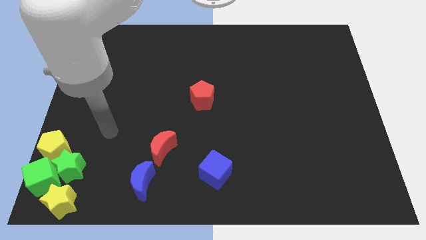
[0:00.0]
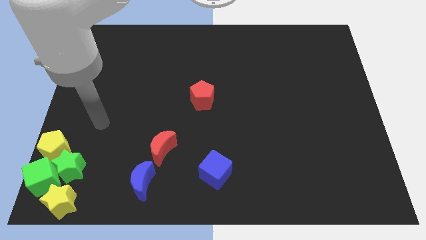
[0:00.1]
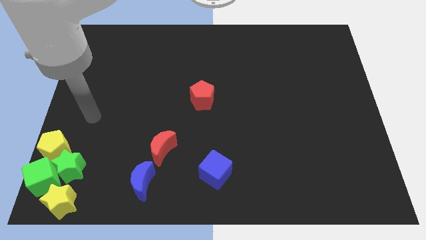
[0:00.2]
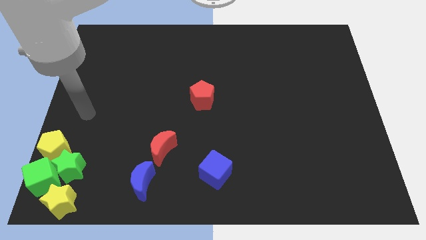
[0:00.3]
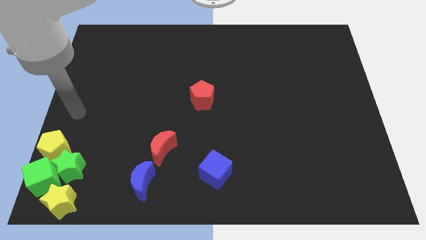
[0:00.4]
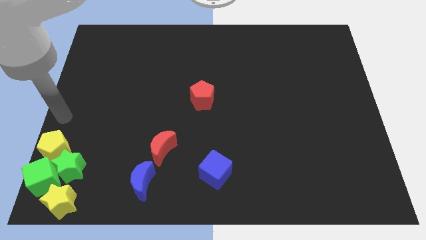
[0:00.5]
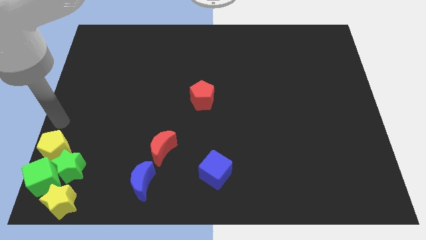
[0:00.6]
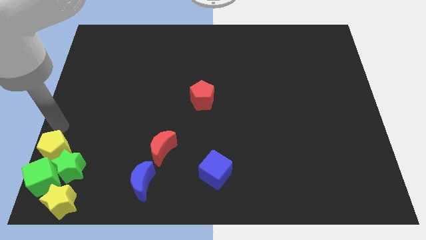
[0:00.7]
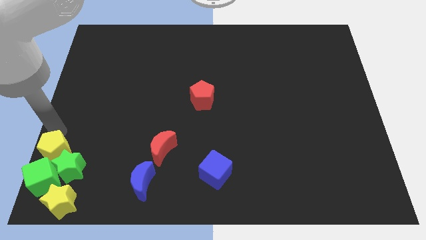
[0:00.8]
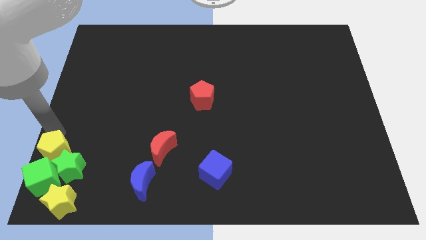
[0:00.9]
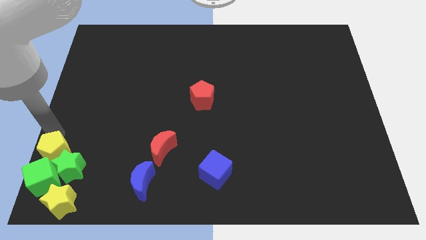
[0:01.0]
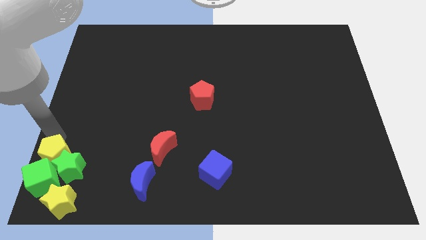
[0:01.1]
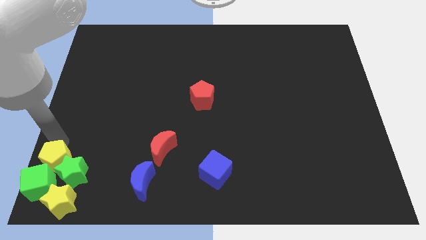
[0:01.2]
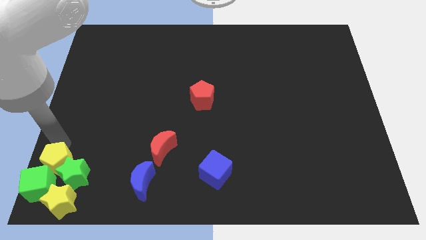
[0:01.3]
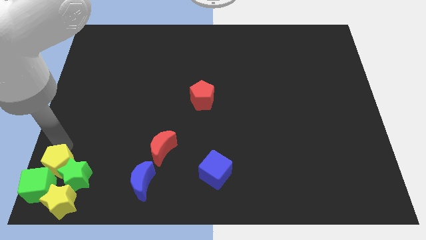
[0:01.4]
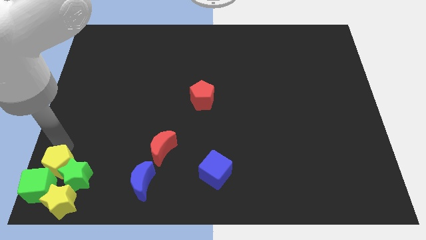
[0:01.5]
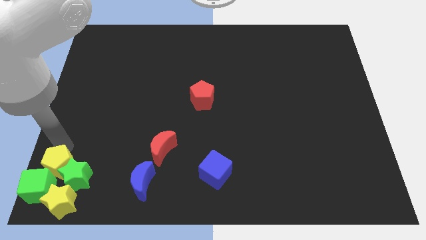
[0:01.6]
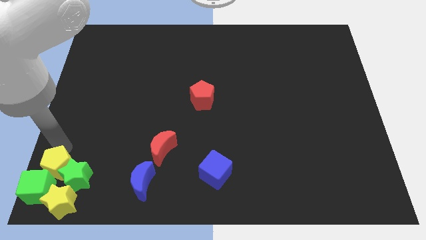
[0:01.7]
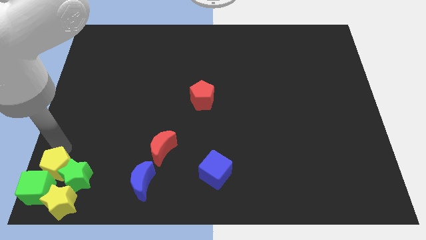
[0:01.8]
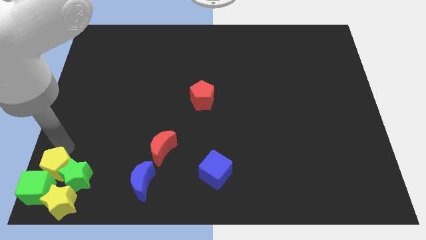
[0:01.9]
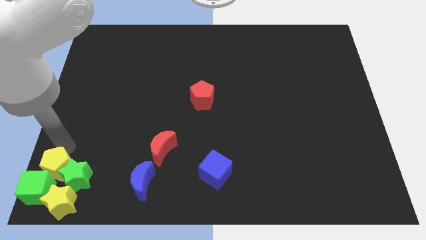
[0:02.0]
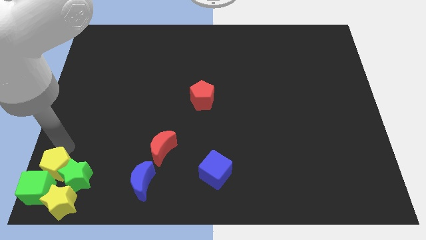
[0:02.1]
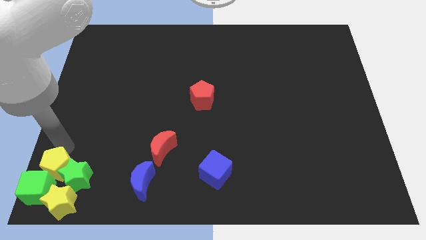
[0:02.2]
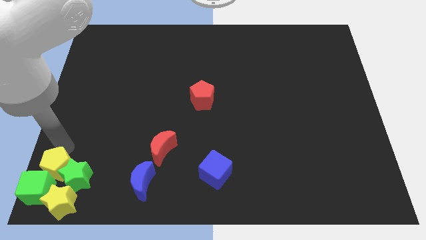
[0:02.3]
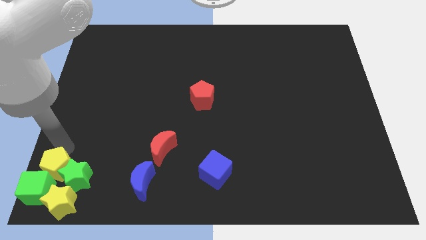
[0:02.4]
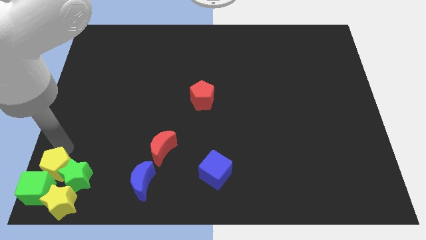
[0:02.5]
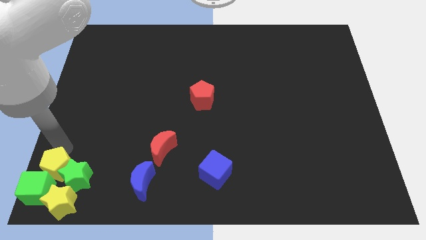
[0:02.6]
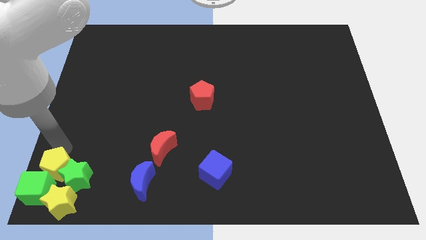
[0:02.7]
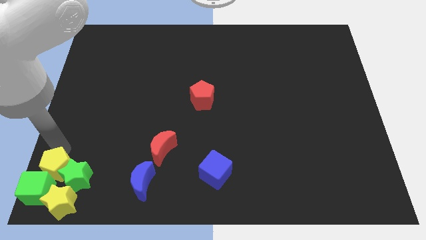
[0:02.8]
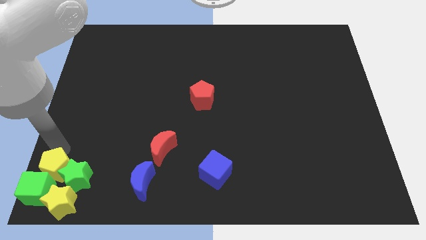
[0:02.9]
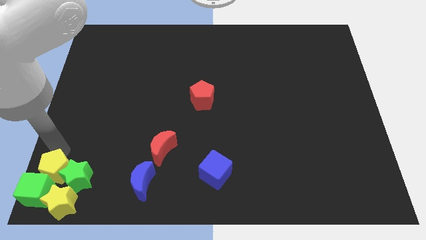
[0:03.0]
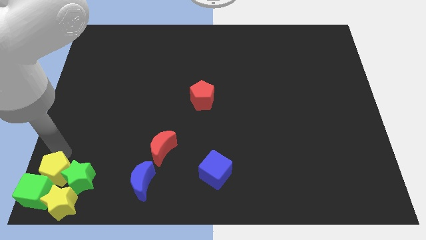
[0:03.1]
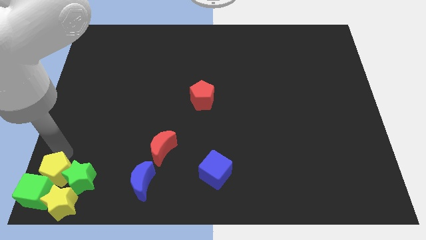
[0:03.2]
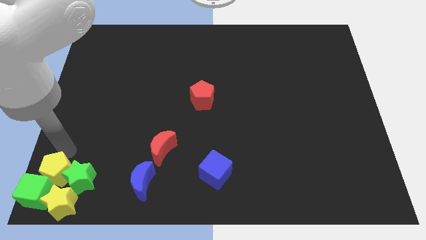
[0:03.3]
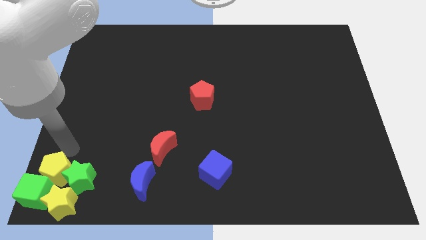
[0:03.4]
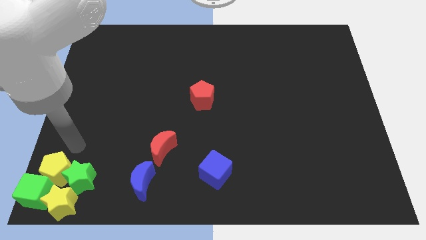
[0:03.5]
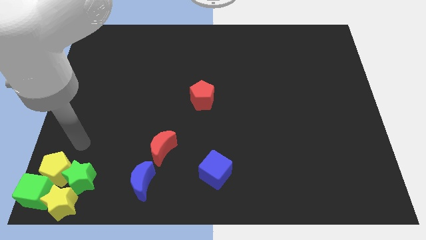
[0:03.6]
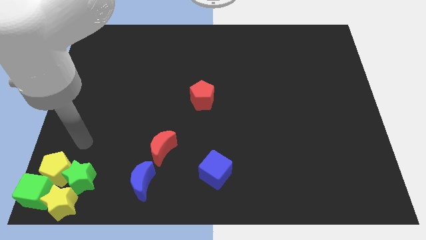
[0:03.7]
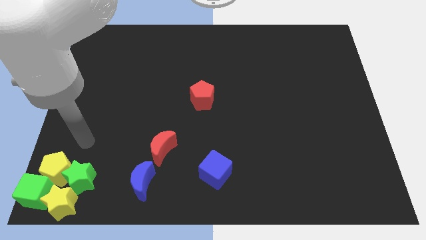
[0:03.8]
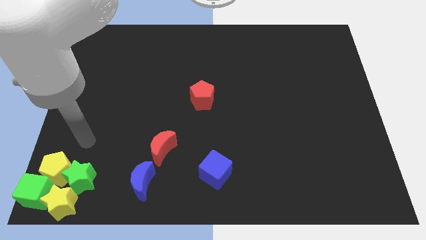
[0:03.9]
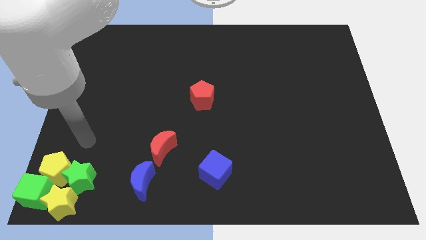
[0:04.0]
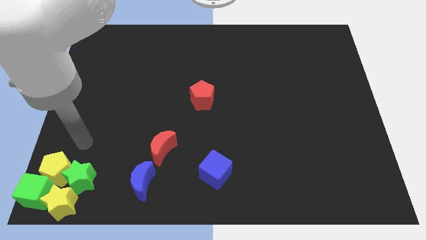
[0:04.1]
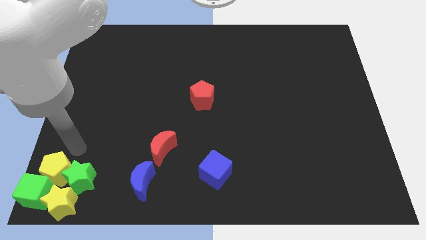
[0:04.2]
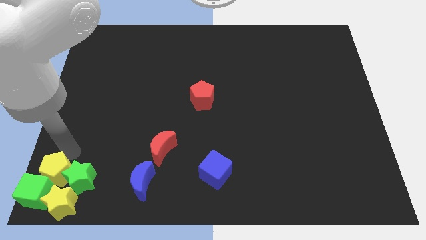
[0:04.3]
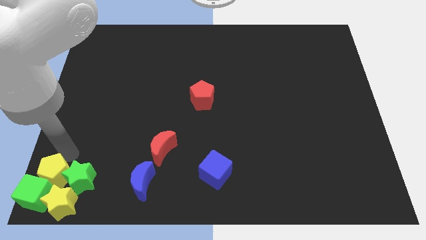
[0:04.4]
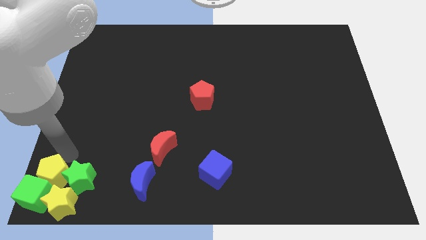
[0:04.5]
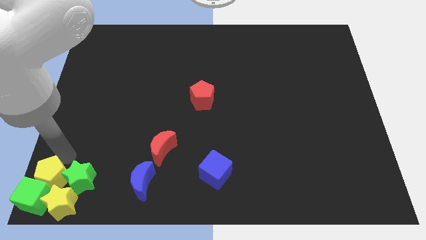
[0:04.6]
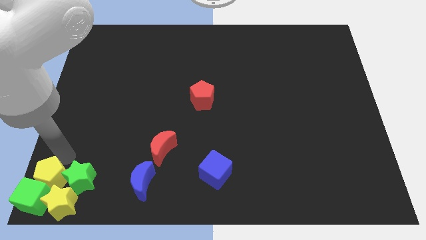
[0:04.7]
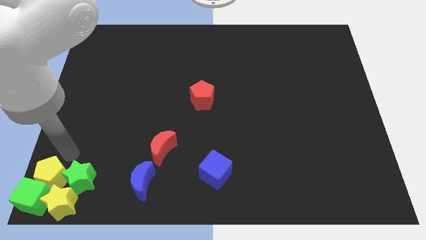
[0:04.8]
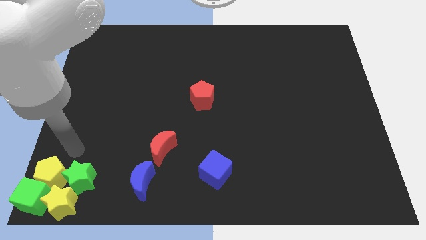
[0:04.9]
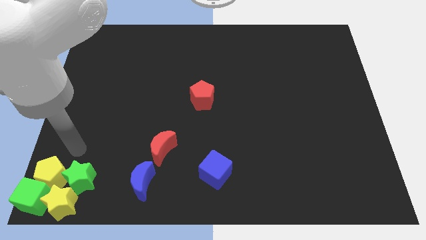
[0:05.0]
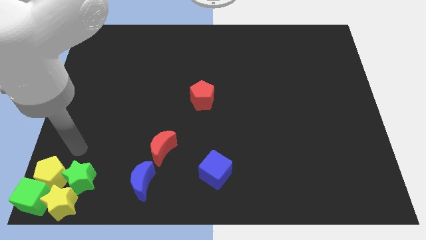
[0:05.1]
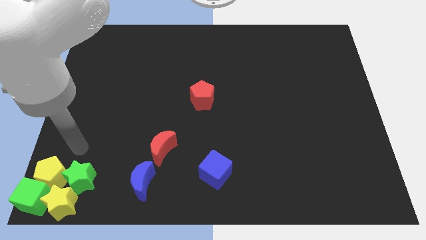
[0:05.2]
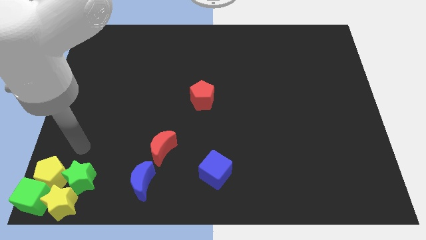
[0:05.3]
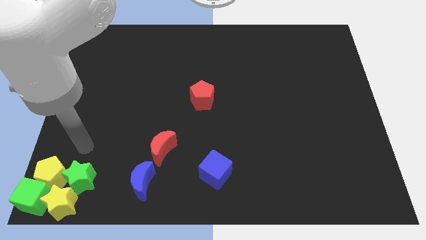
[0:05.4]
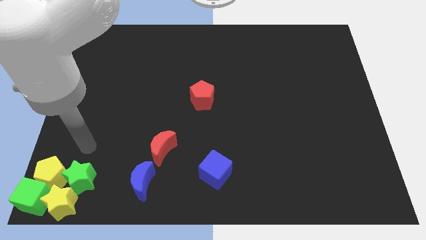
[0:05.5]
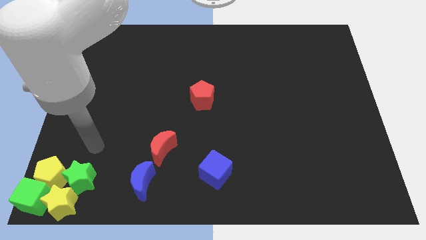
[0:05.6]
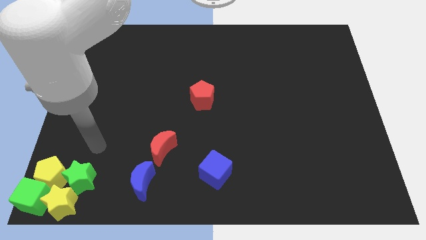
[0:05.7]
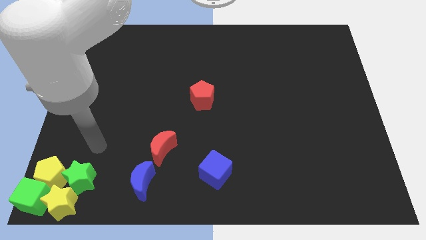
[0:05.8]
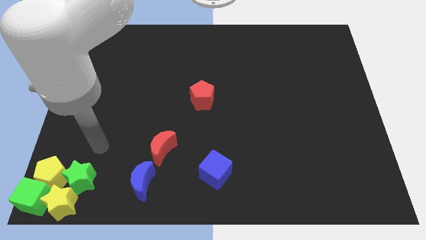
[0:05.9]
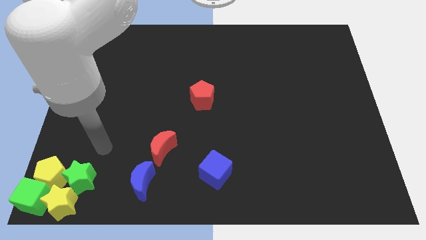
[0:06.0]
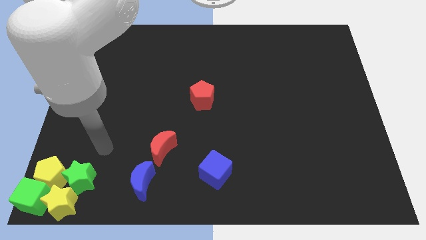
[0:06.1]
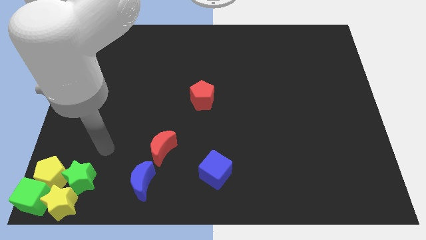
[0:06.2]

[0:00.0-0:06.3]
place yellow pentagon yellow star green star and green block in a group

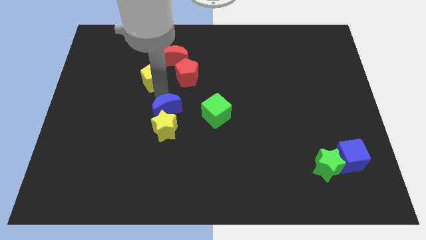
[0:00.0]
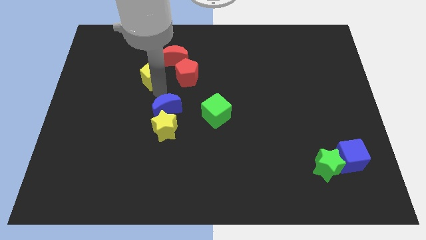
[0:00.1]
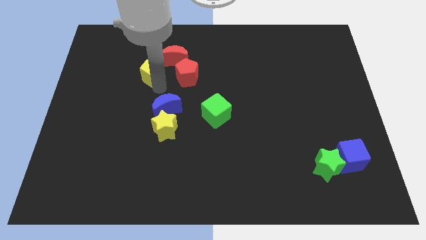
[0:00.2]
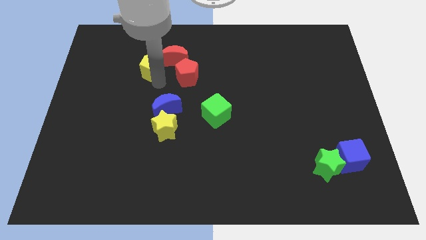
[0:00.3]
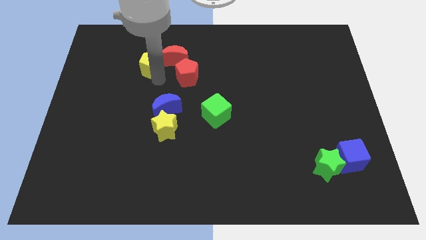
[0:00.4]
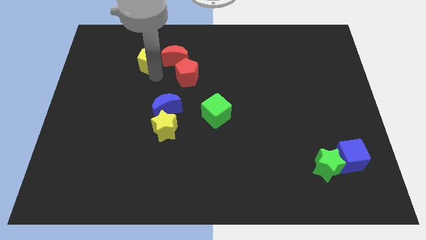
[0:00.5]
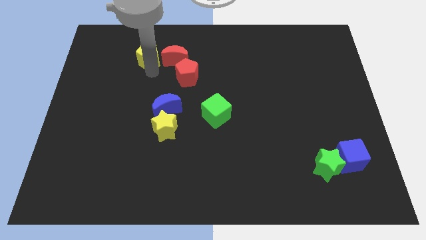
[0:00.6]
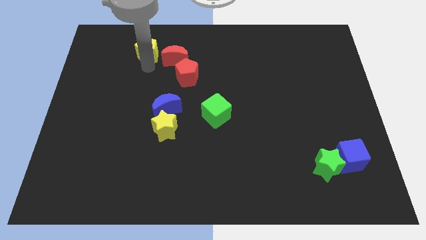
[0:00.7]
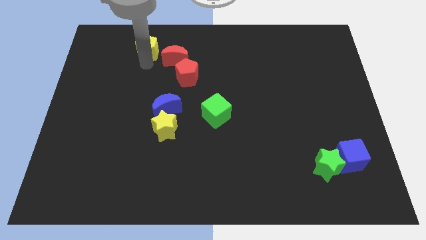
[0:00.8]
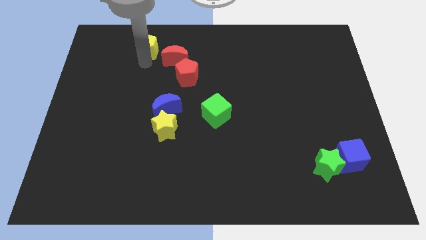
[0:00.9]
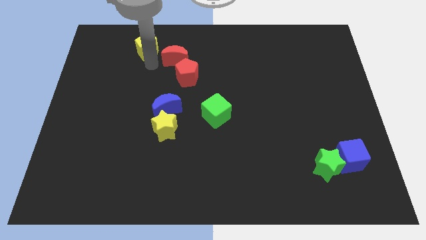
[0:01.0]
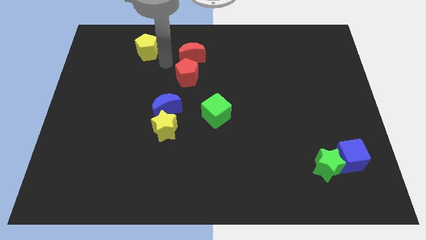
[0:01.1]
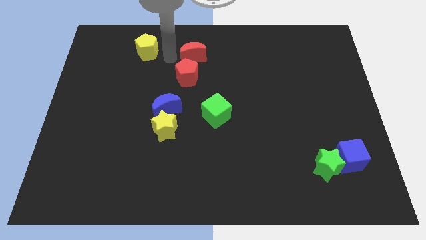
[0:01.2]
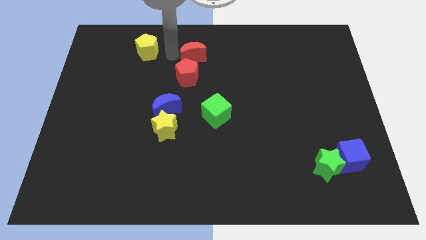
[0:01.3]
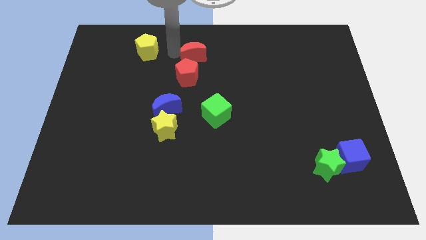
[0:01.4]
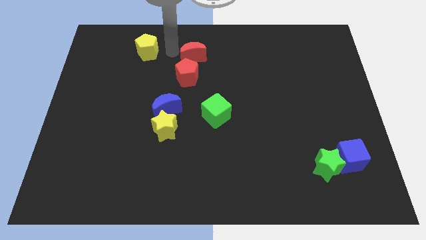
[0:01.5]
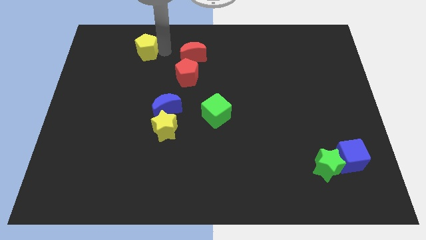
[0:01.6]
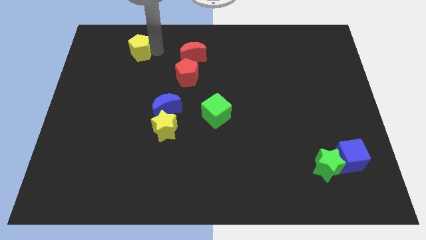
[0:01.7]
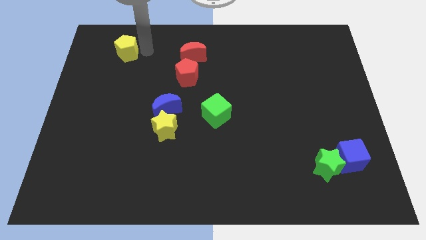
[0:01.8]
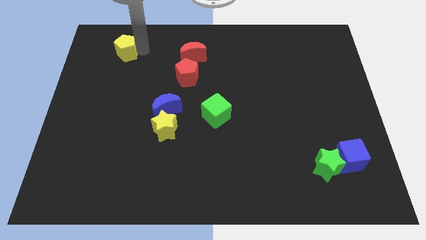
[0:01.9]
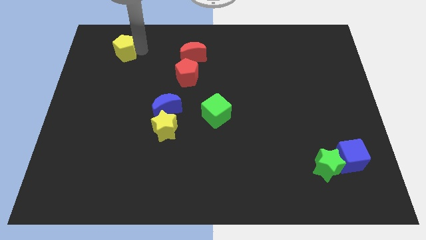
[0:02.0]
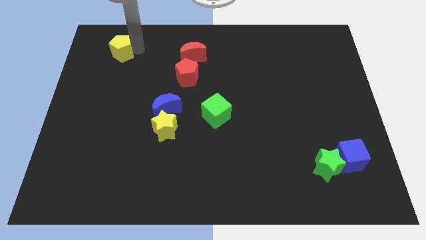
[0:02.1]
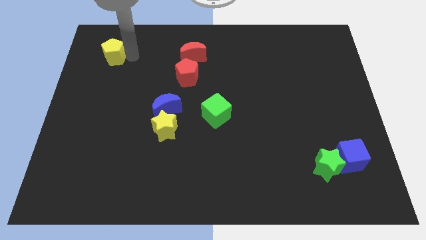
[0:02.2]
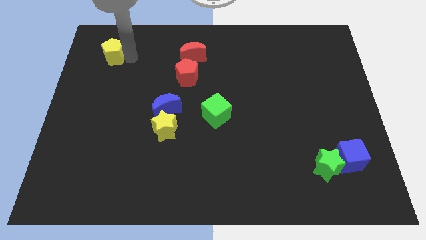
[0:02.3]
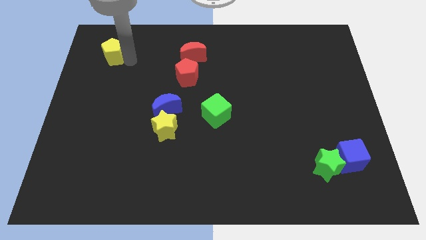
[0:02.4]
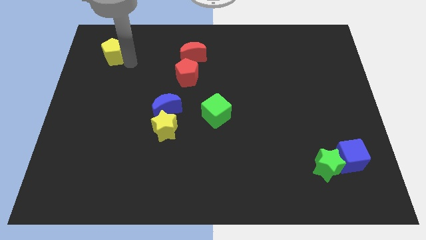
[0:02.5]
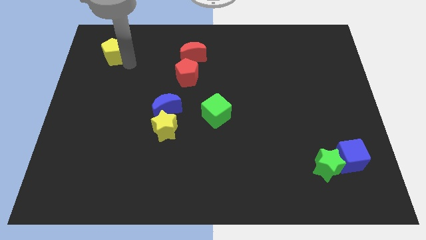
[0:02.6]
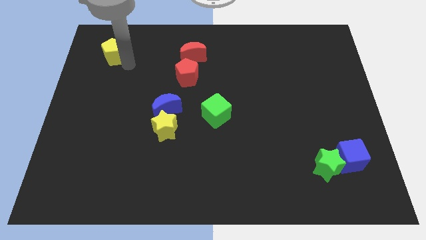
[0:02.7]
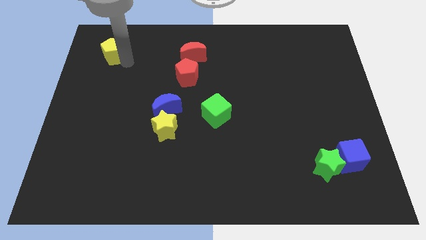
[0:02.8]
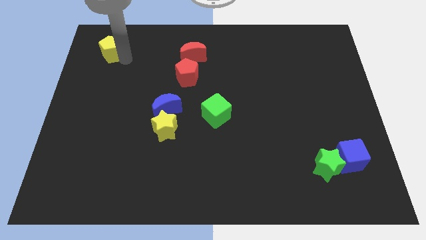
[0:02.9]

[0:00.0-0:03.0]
push the yellow pentagon towards top left
